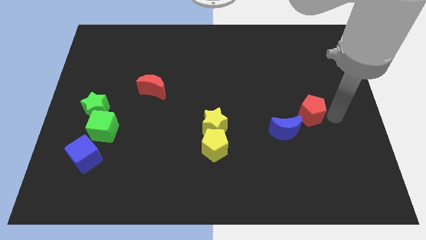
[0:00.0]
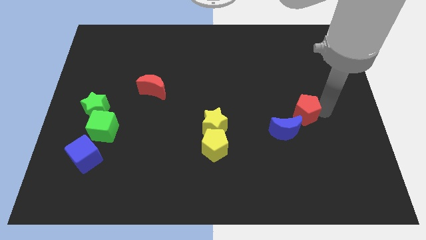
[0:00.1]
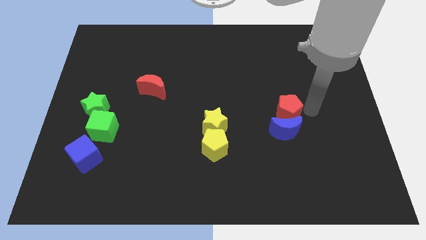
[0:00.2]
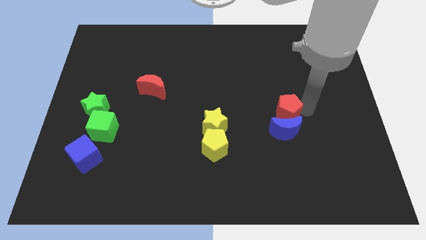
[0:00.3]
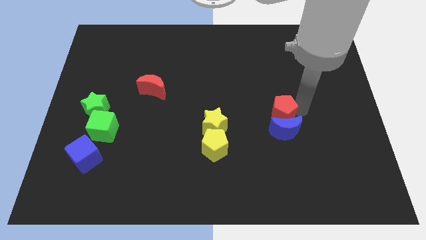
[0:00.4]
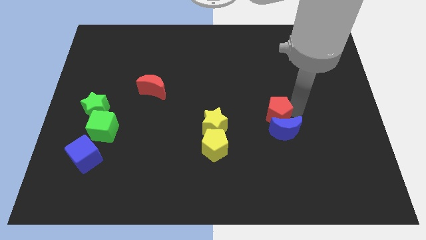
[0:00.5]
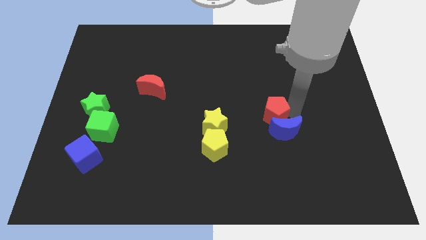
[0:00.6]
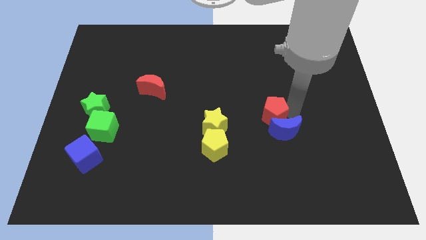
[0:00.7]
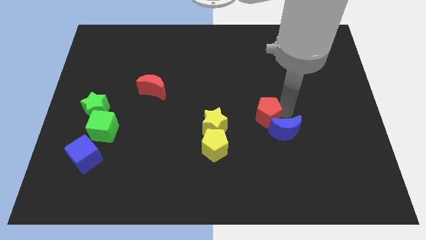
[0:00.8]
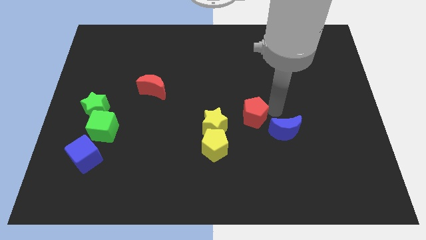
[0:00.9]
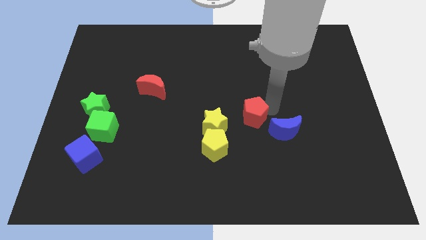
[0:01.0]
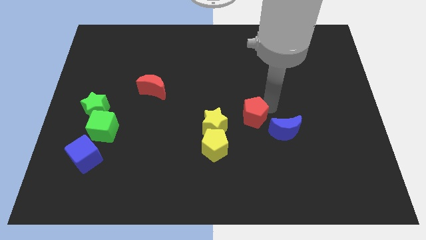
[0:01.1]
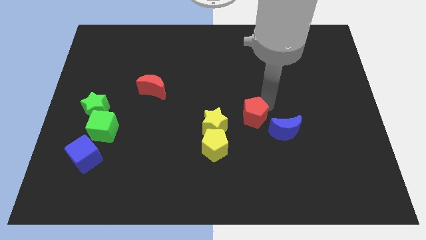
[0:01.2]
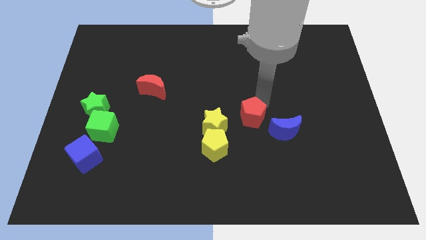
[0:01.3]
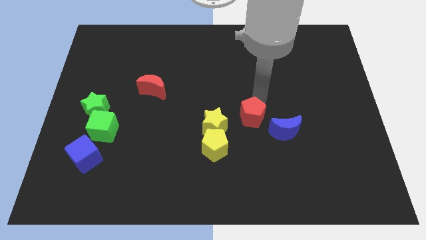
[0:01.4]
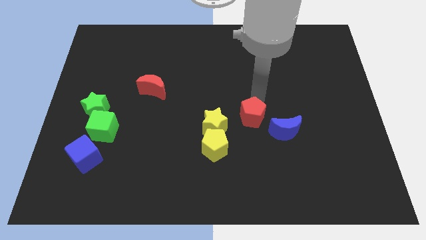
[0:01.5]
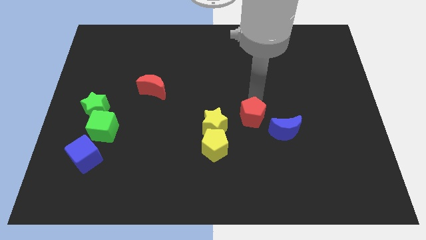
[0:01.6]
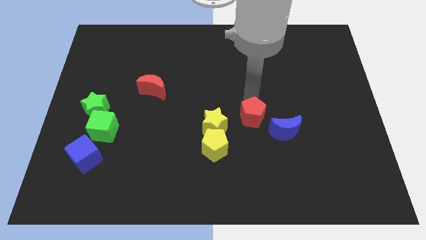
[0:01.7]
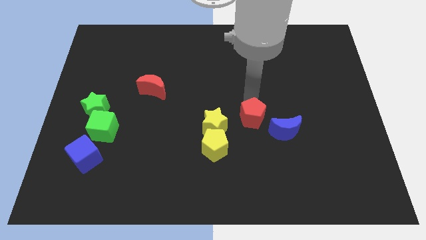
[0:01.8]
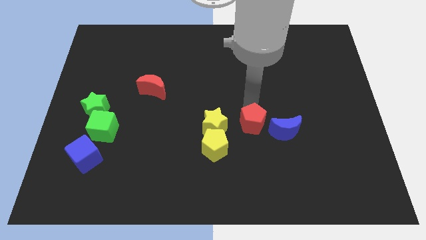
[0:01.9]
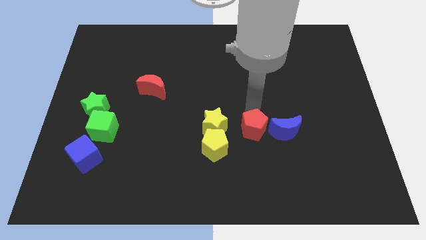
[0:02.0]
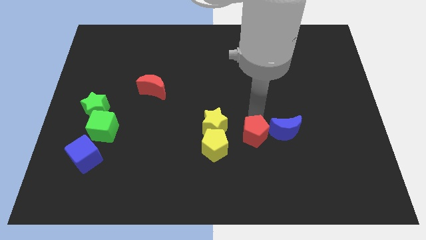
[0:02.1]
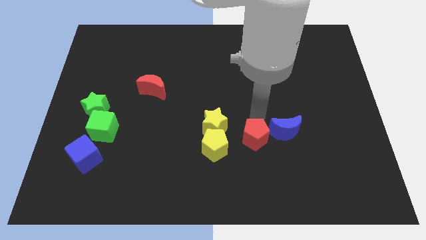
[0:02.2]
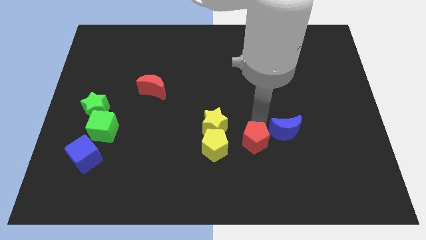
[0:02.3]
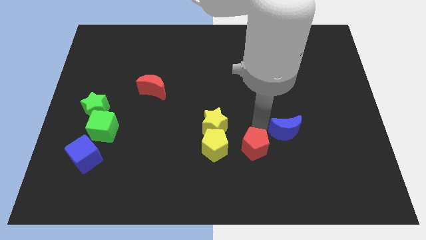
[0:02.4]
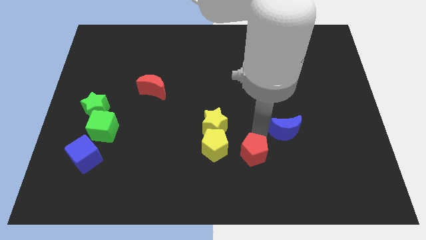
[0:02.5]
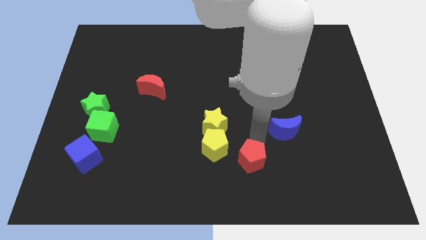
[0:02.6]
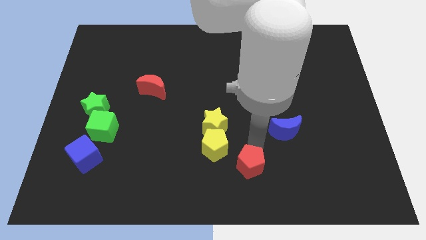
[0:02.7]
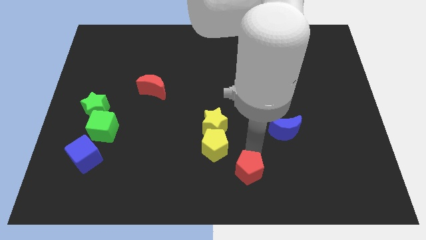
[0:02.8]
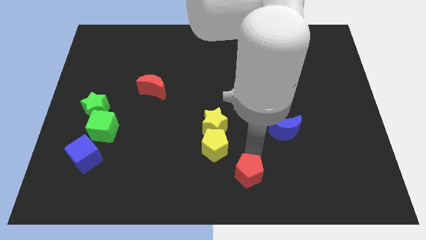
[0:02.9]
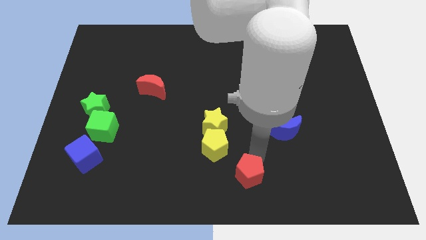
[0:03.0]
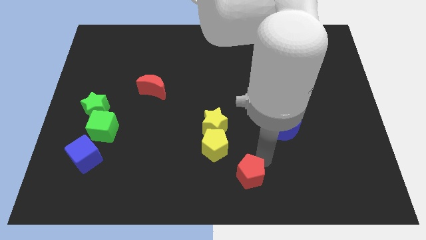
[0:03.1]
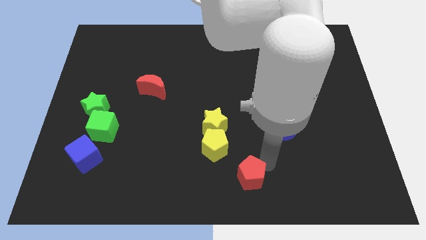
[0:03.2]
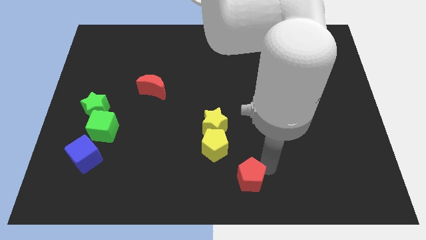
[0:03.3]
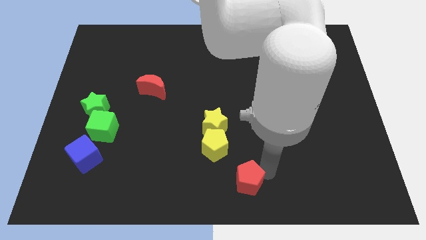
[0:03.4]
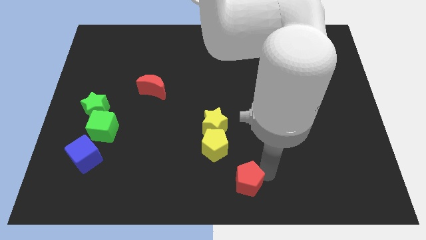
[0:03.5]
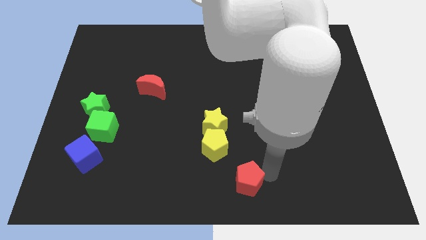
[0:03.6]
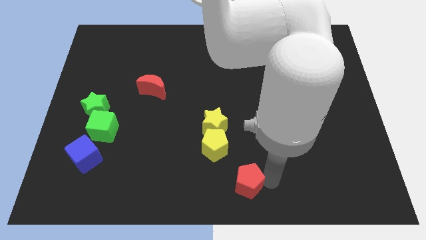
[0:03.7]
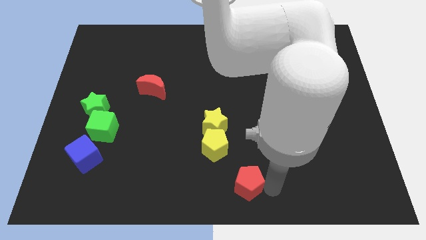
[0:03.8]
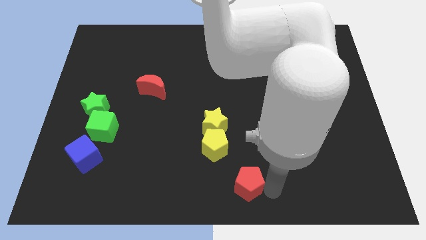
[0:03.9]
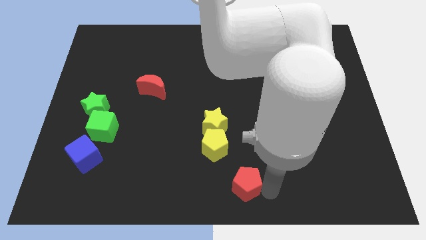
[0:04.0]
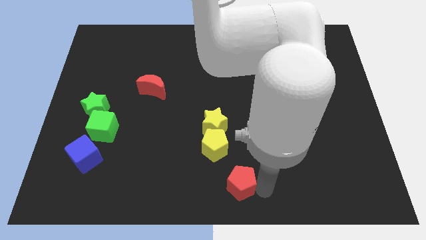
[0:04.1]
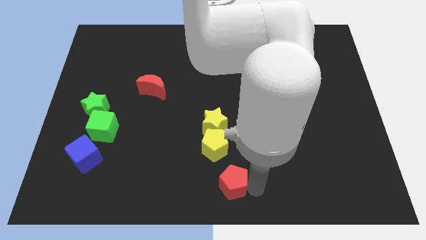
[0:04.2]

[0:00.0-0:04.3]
push red pentagon towards yellow pentagon

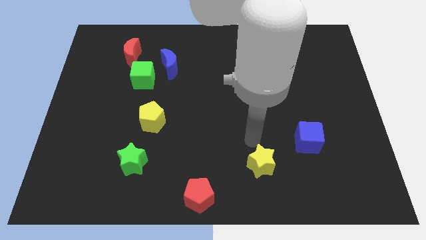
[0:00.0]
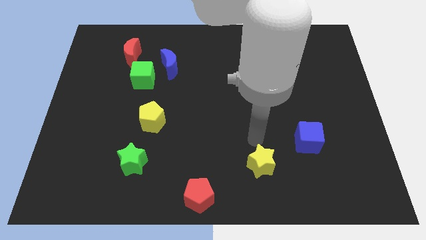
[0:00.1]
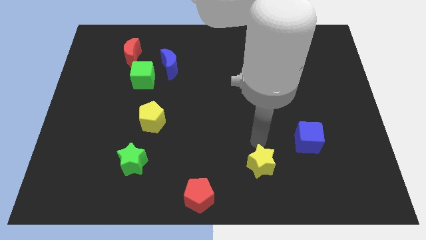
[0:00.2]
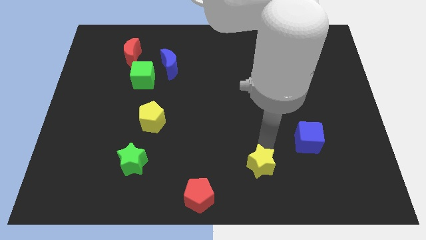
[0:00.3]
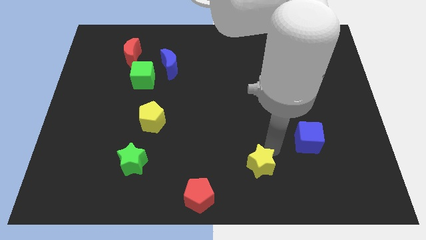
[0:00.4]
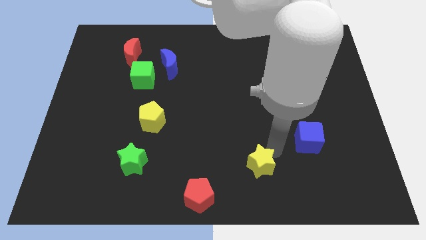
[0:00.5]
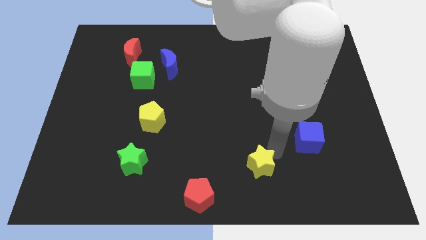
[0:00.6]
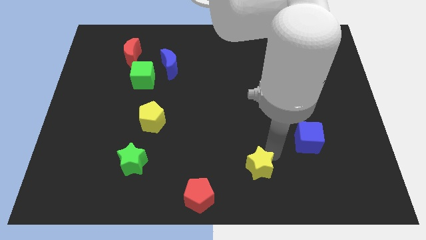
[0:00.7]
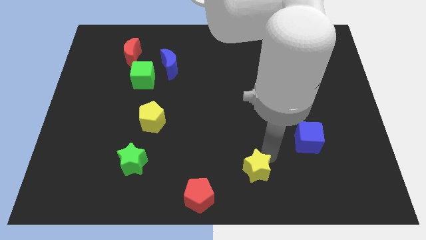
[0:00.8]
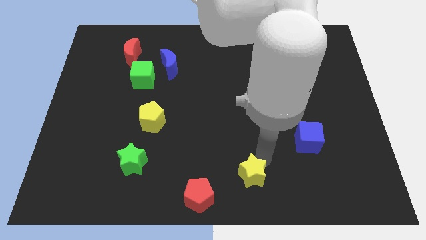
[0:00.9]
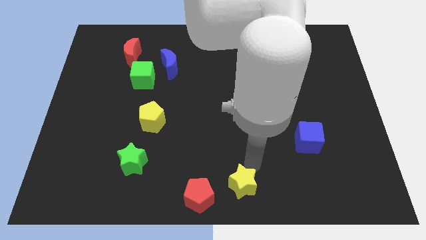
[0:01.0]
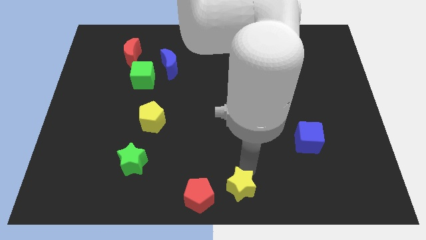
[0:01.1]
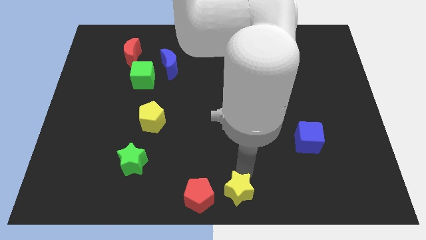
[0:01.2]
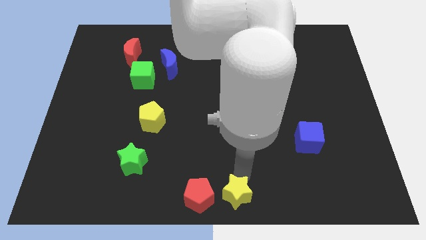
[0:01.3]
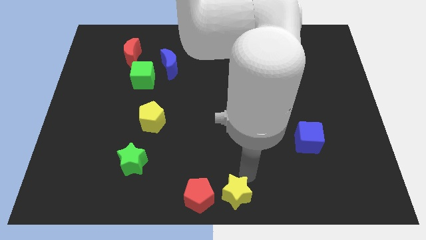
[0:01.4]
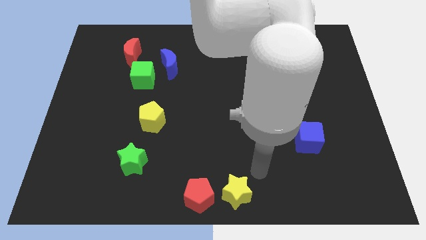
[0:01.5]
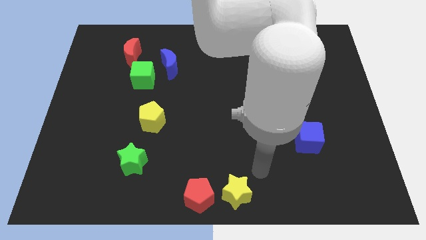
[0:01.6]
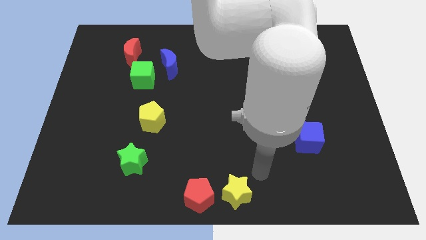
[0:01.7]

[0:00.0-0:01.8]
place the yellow star in the bottom center

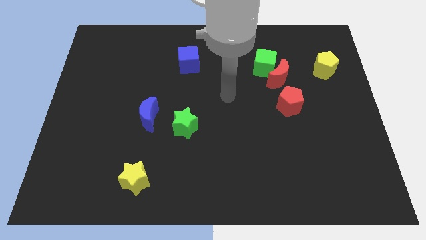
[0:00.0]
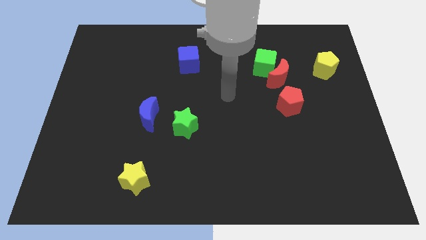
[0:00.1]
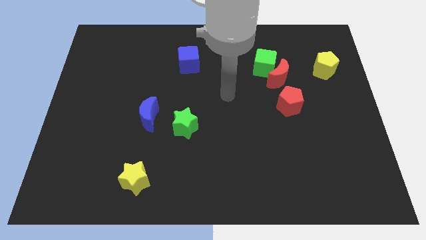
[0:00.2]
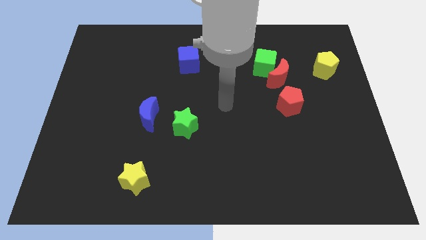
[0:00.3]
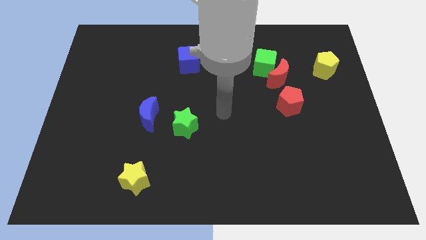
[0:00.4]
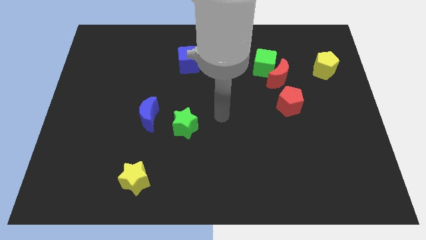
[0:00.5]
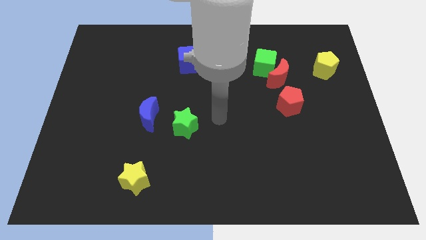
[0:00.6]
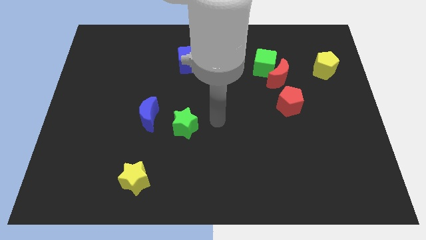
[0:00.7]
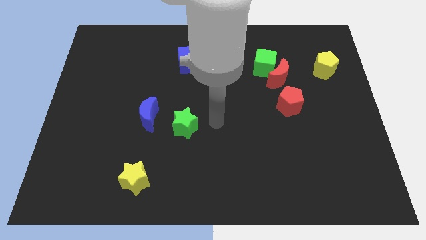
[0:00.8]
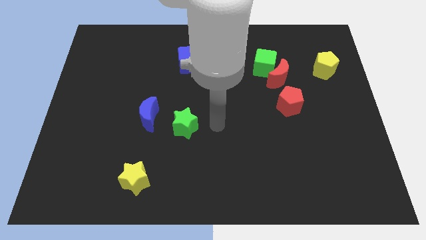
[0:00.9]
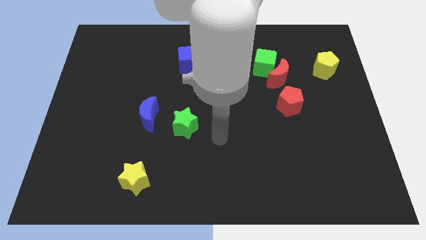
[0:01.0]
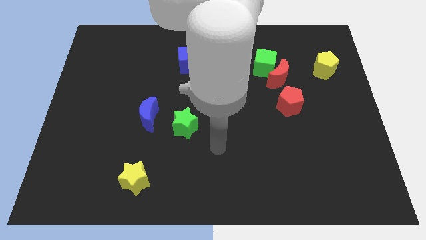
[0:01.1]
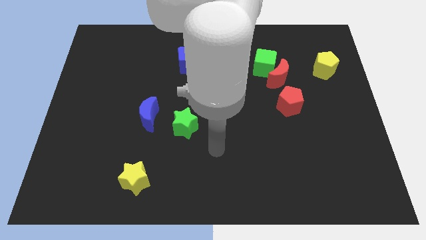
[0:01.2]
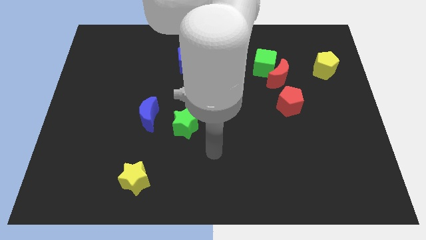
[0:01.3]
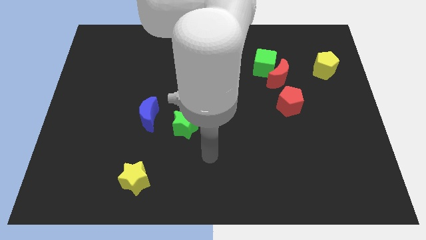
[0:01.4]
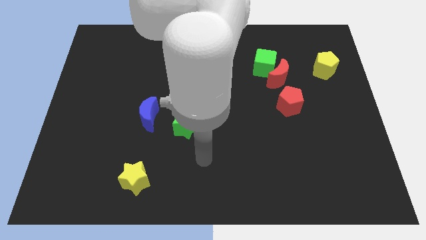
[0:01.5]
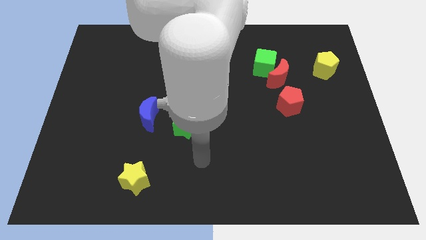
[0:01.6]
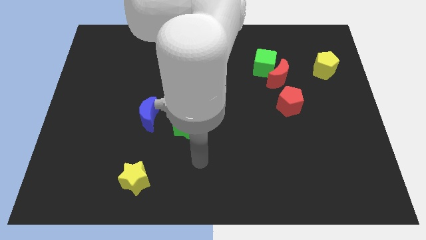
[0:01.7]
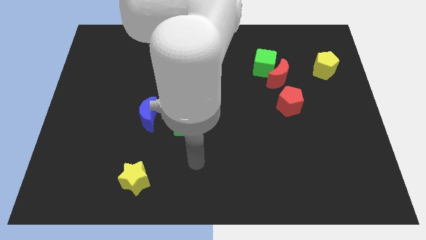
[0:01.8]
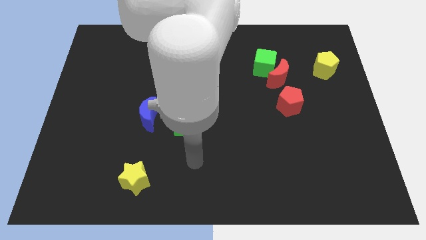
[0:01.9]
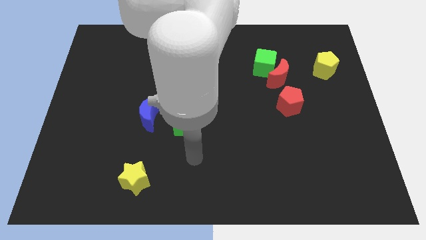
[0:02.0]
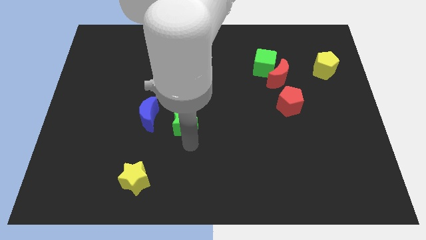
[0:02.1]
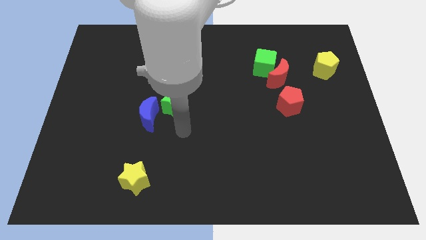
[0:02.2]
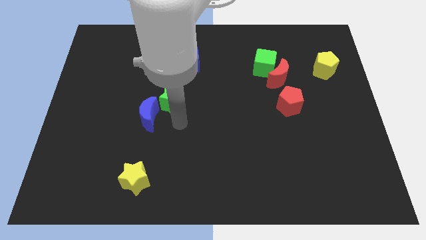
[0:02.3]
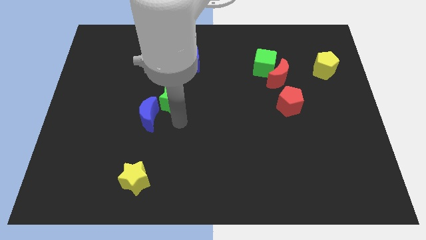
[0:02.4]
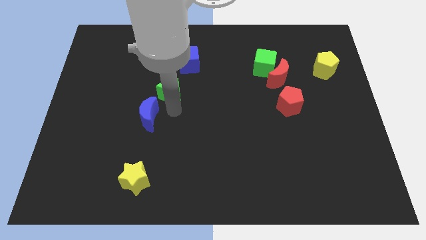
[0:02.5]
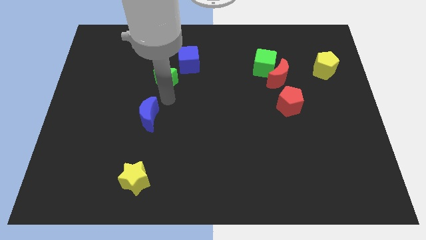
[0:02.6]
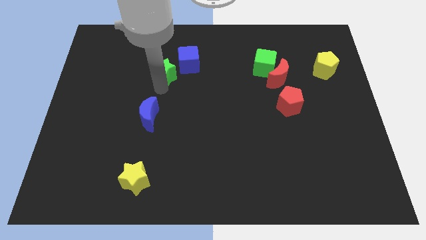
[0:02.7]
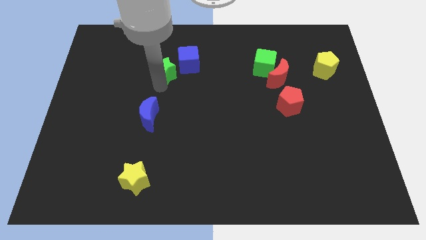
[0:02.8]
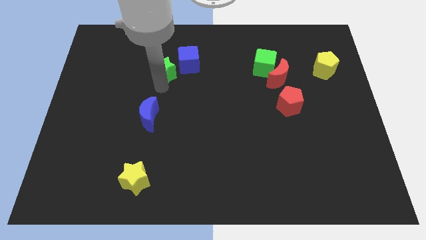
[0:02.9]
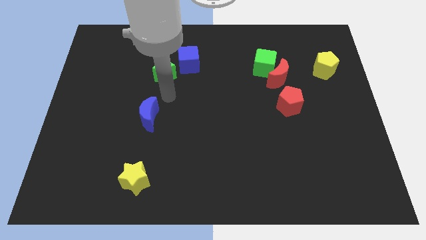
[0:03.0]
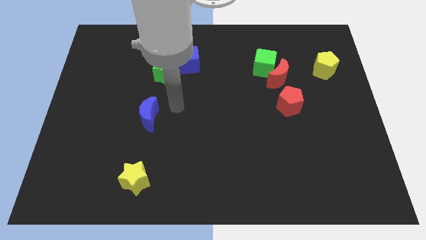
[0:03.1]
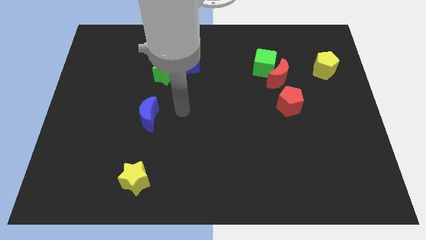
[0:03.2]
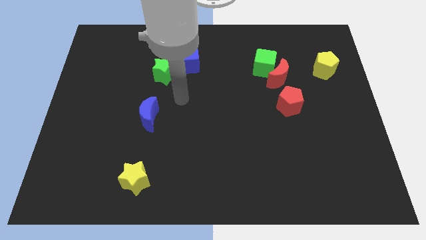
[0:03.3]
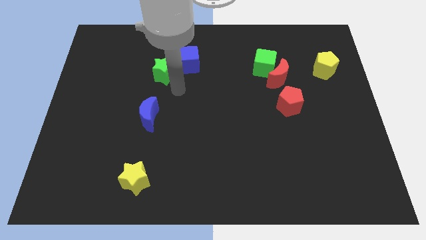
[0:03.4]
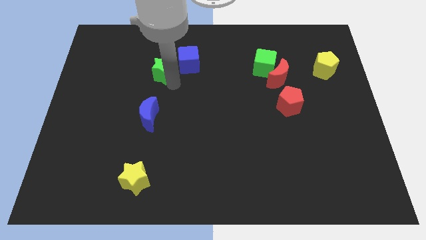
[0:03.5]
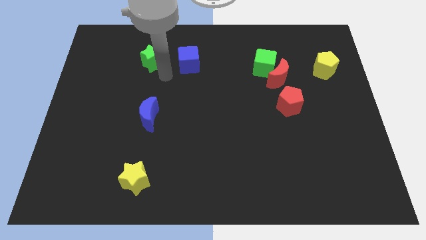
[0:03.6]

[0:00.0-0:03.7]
push the green star to the left side of the blue cube
